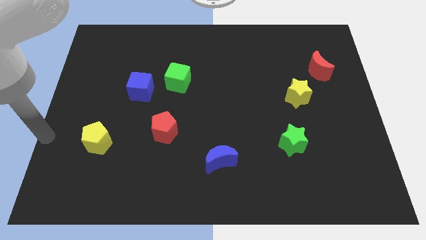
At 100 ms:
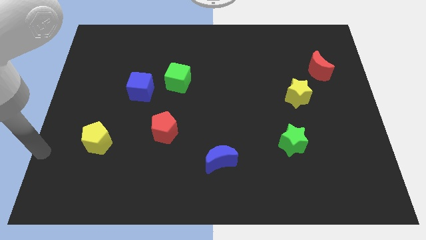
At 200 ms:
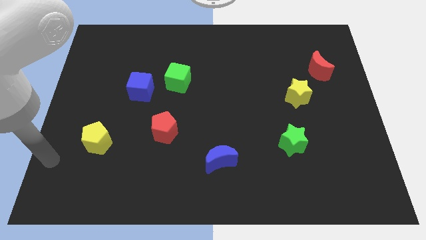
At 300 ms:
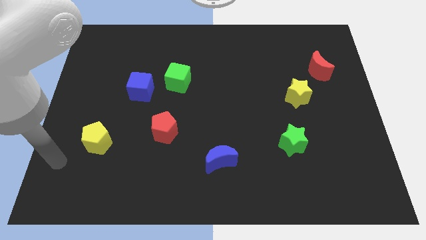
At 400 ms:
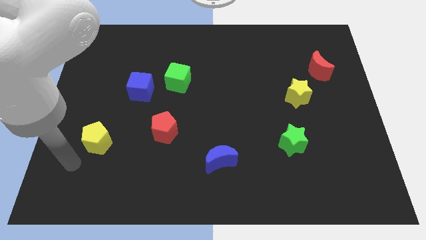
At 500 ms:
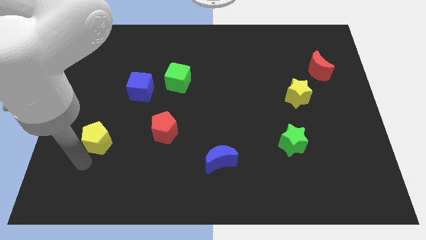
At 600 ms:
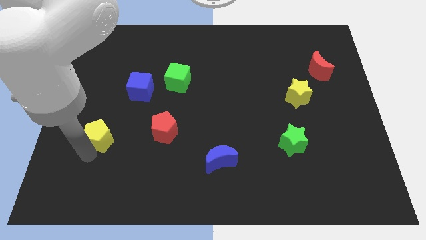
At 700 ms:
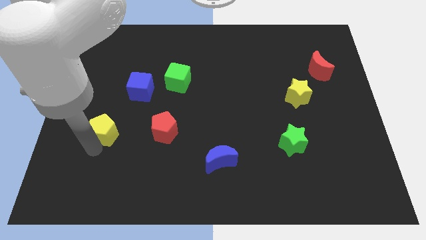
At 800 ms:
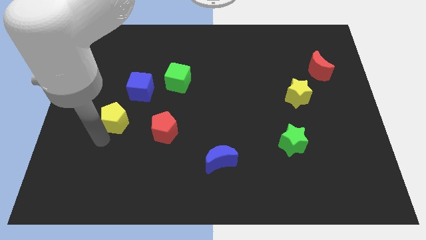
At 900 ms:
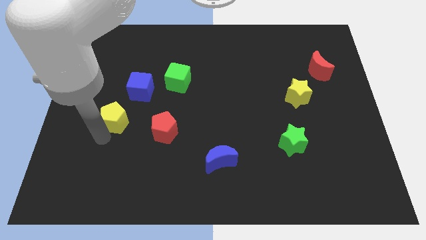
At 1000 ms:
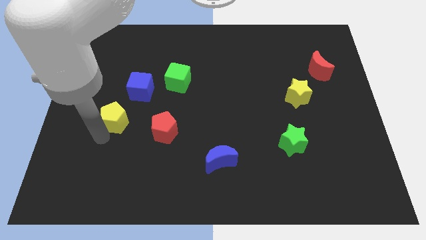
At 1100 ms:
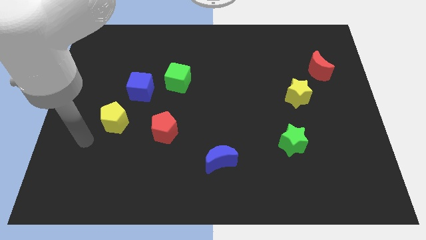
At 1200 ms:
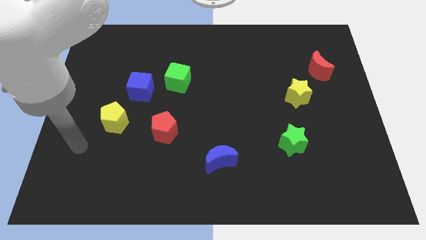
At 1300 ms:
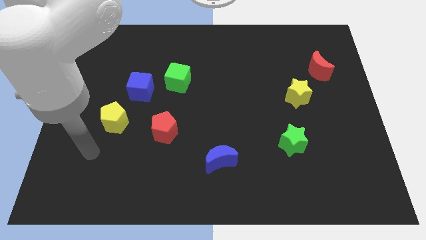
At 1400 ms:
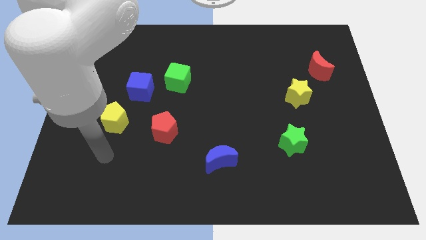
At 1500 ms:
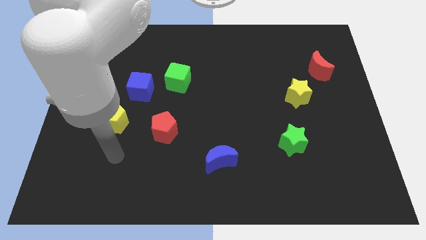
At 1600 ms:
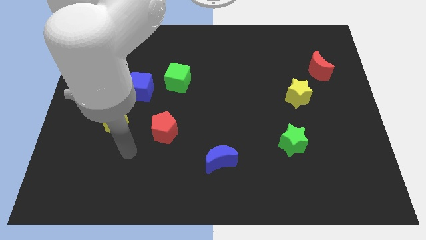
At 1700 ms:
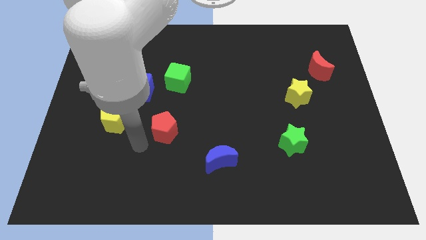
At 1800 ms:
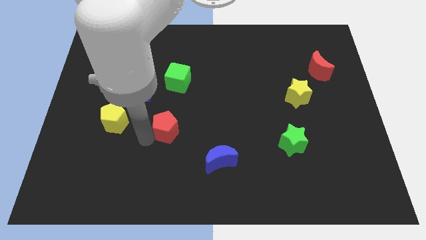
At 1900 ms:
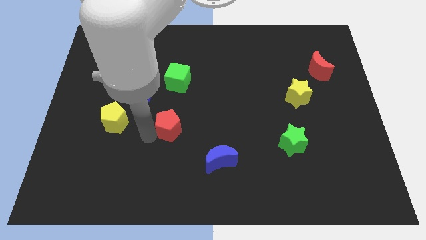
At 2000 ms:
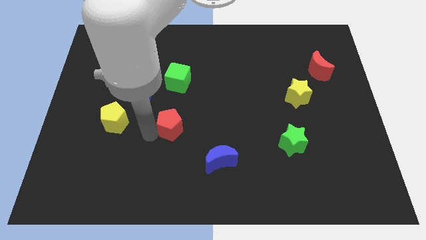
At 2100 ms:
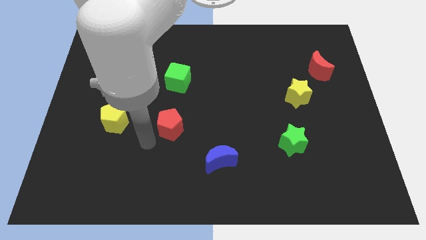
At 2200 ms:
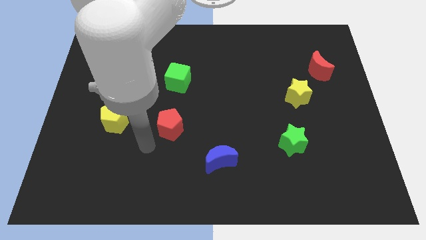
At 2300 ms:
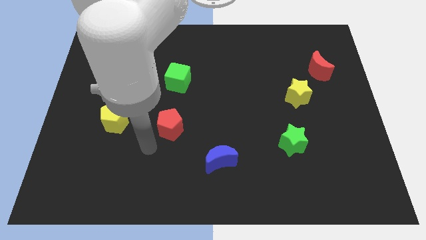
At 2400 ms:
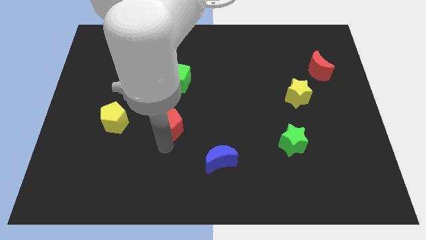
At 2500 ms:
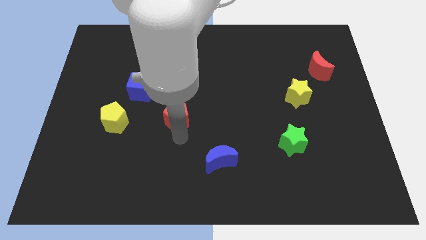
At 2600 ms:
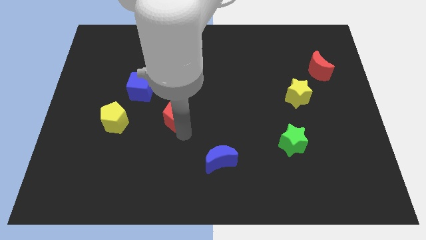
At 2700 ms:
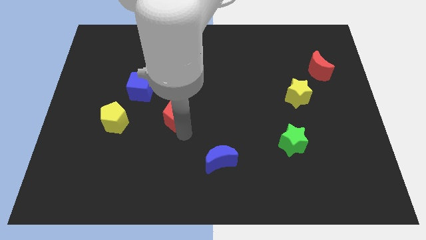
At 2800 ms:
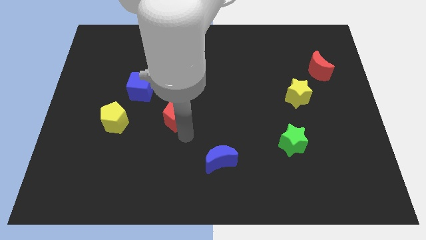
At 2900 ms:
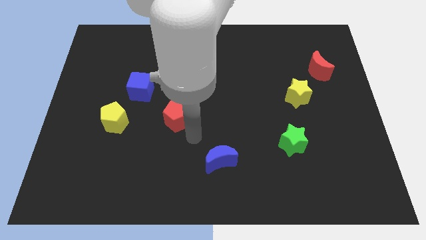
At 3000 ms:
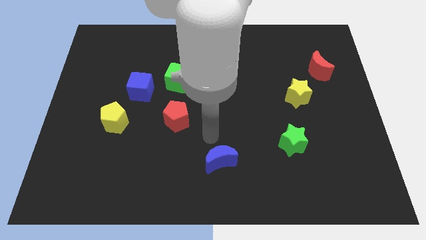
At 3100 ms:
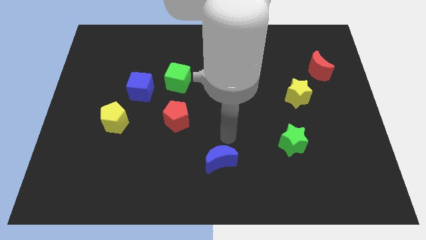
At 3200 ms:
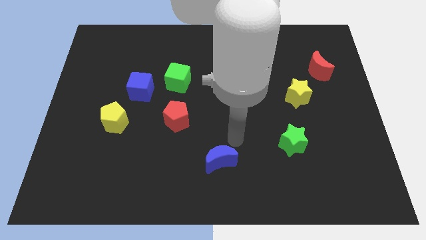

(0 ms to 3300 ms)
slightly push the yellow pentagon and red pentagon towards center

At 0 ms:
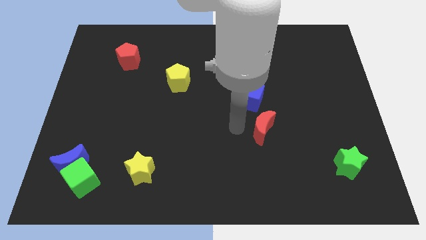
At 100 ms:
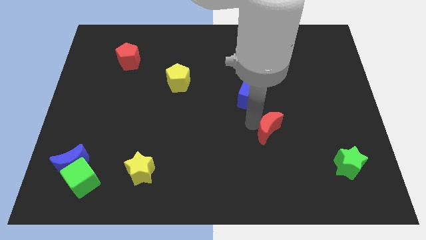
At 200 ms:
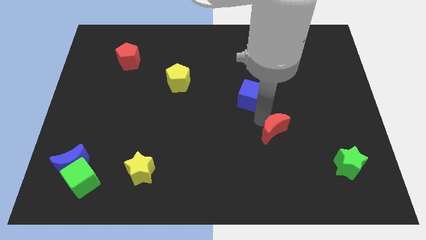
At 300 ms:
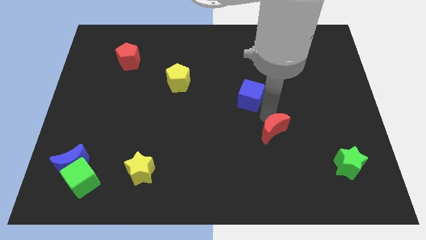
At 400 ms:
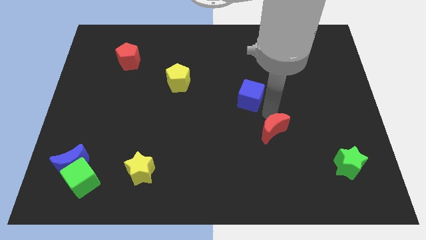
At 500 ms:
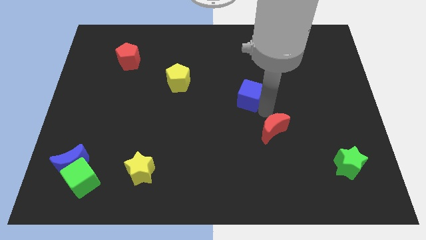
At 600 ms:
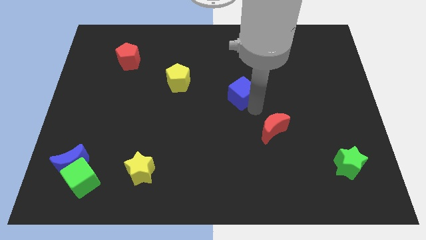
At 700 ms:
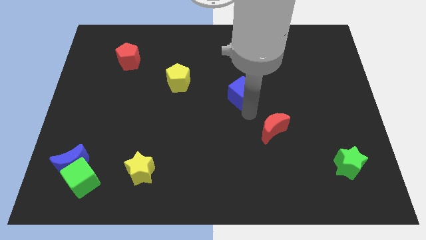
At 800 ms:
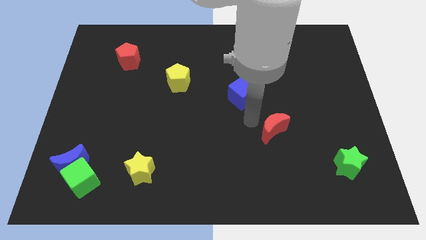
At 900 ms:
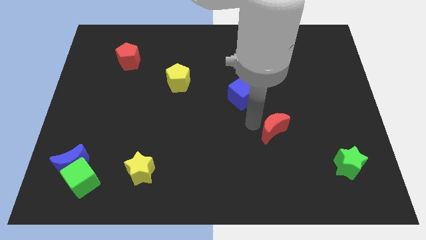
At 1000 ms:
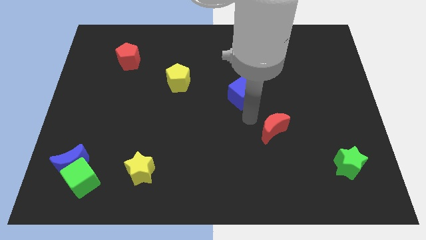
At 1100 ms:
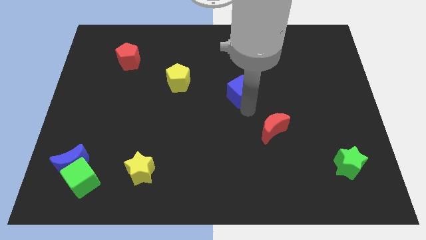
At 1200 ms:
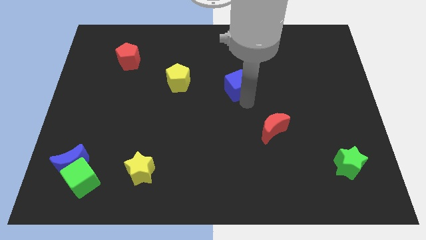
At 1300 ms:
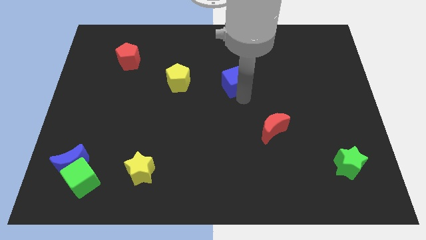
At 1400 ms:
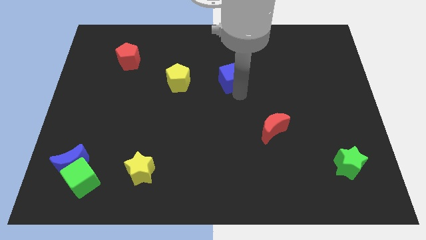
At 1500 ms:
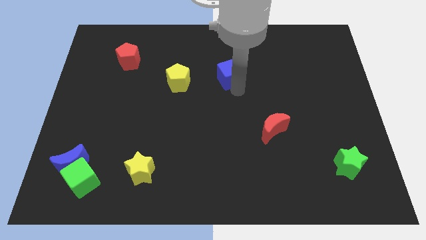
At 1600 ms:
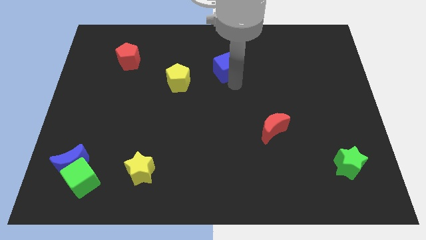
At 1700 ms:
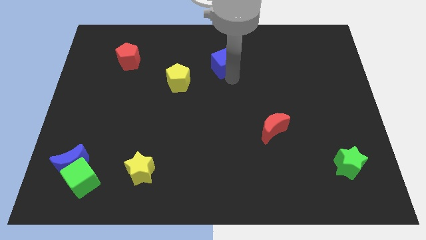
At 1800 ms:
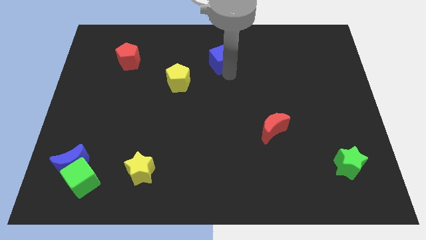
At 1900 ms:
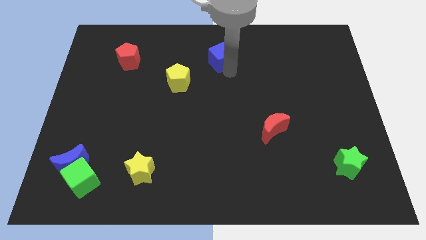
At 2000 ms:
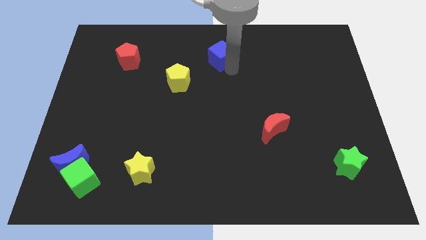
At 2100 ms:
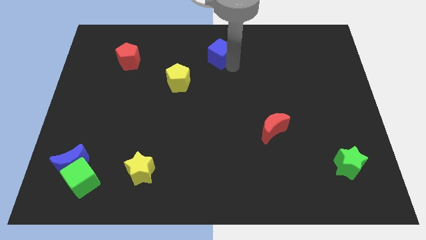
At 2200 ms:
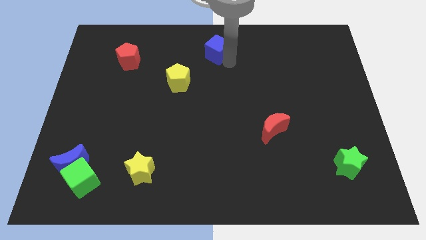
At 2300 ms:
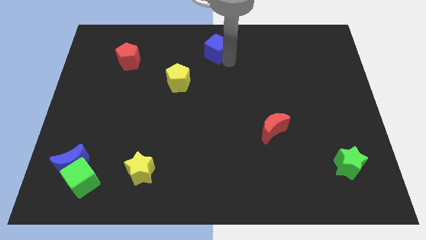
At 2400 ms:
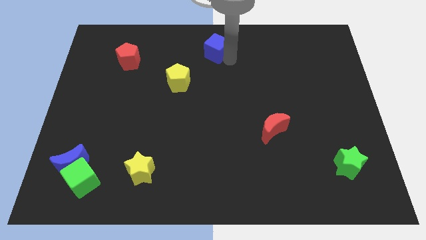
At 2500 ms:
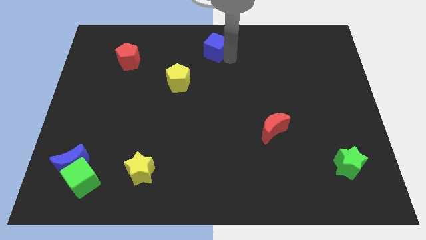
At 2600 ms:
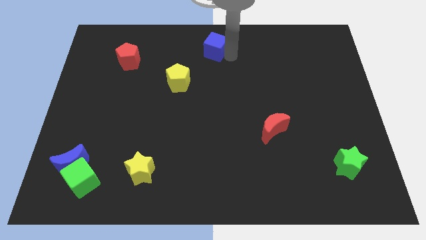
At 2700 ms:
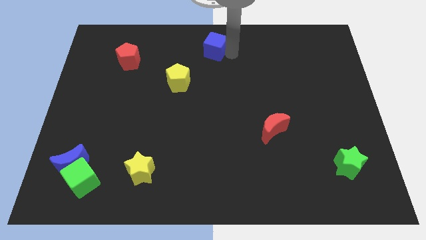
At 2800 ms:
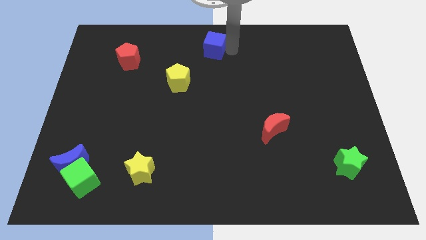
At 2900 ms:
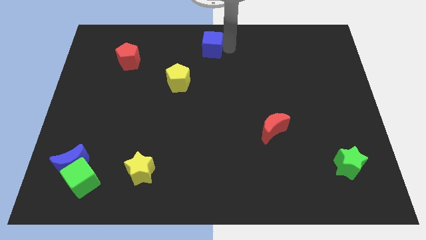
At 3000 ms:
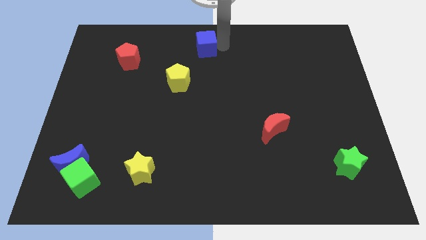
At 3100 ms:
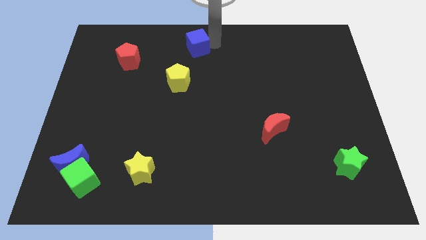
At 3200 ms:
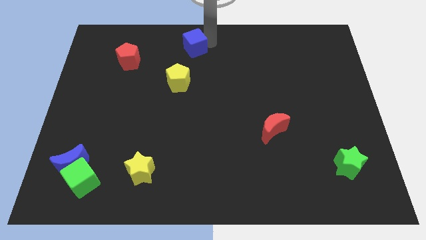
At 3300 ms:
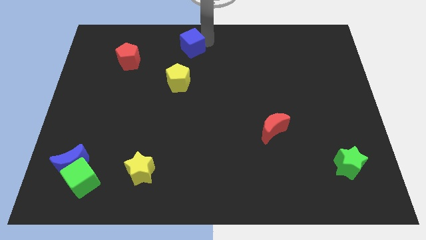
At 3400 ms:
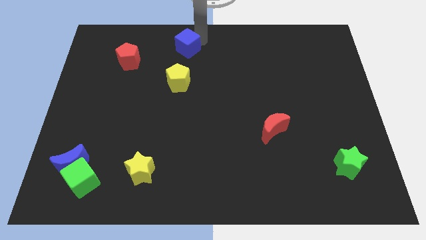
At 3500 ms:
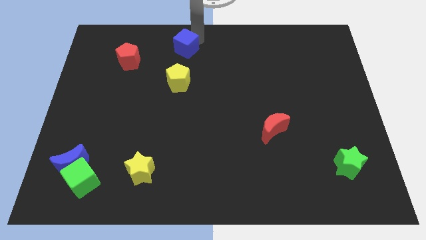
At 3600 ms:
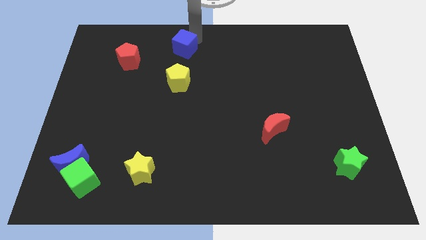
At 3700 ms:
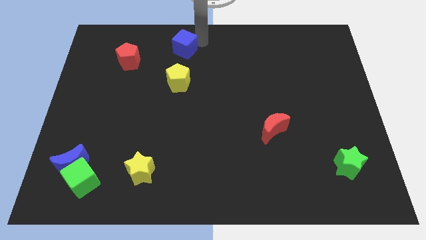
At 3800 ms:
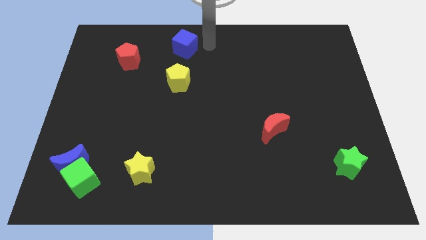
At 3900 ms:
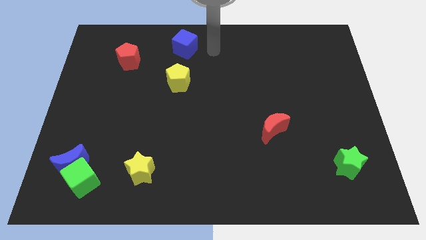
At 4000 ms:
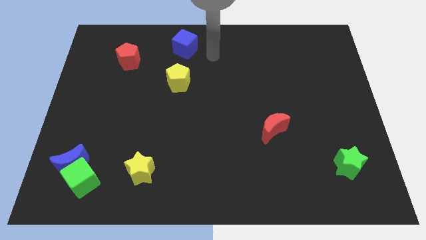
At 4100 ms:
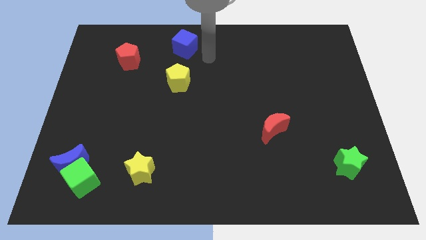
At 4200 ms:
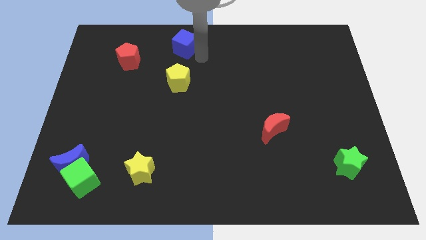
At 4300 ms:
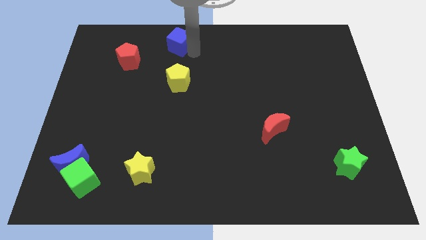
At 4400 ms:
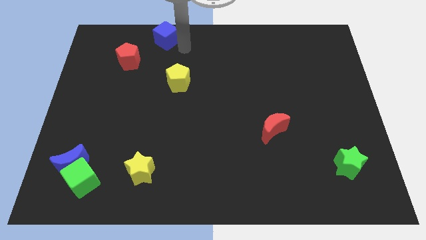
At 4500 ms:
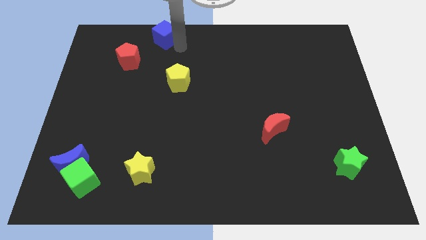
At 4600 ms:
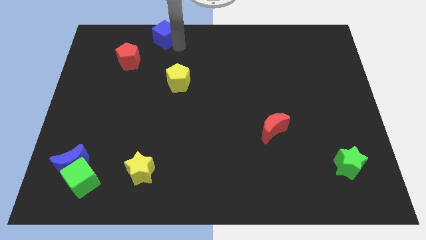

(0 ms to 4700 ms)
move the blue cube diagonally above the top right side of the red pentagon

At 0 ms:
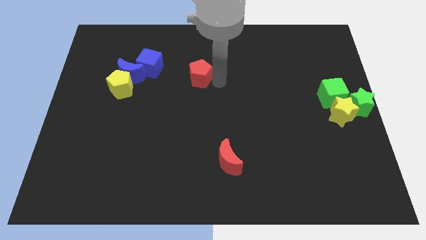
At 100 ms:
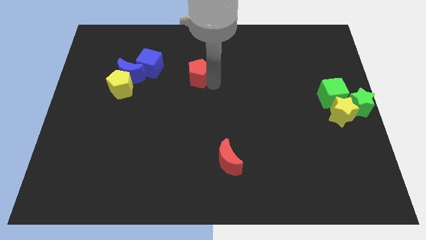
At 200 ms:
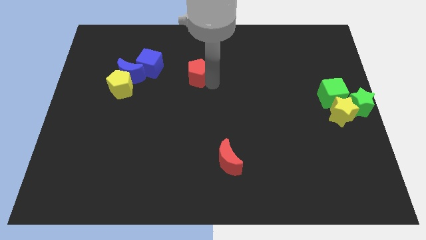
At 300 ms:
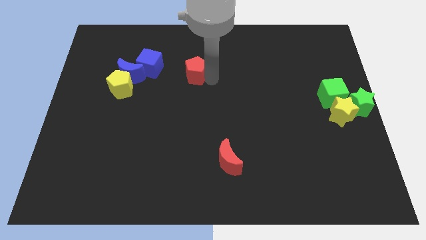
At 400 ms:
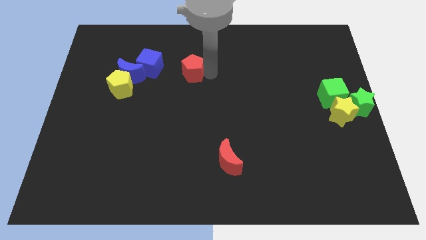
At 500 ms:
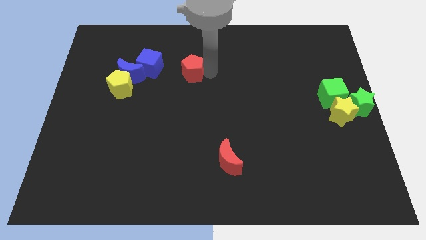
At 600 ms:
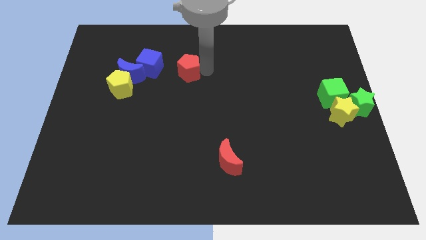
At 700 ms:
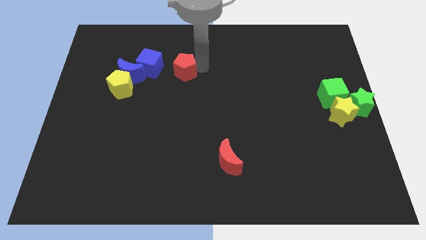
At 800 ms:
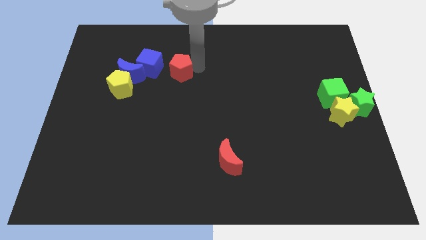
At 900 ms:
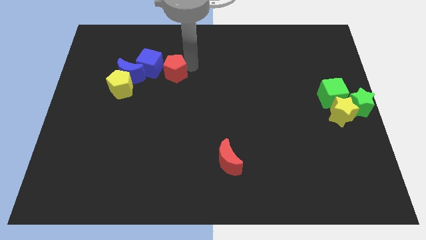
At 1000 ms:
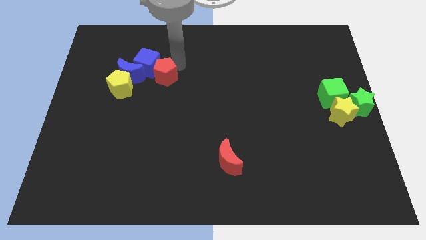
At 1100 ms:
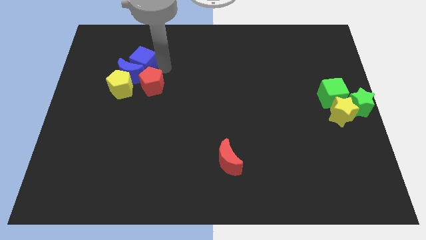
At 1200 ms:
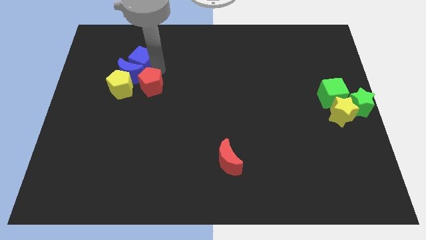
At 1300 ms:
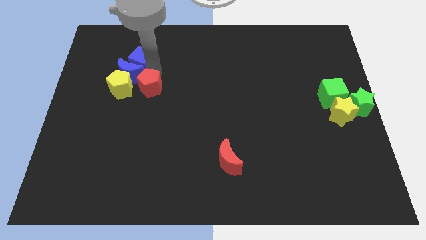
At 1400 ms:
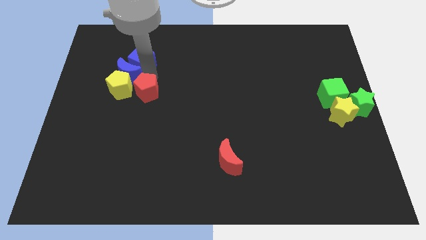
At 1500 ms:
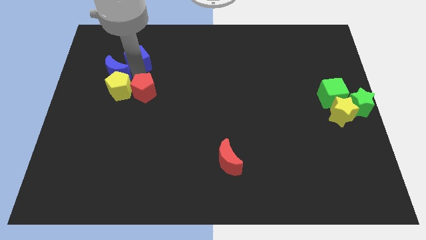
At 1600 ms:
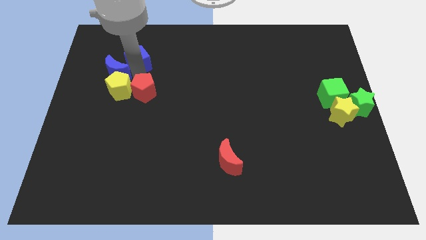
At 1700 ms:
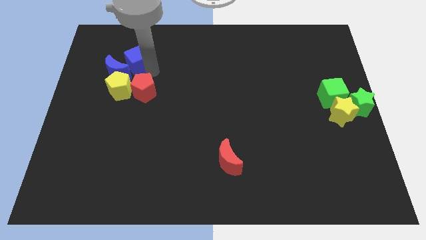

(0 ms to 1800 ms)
push the red pentagon to the right of the yellow pentagon
